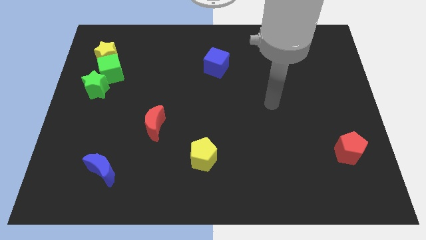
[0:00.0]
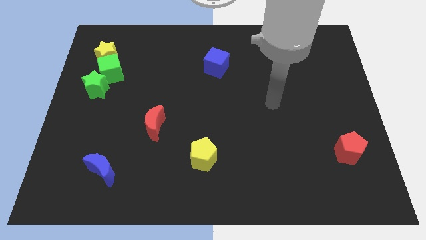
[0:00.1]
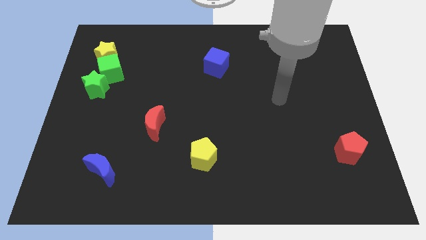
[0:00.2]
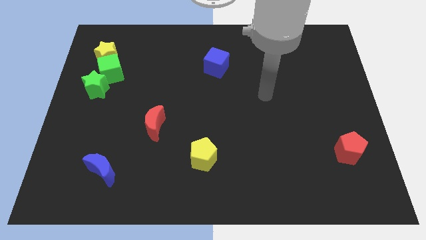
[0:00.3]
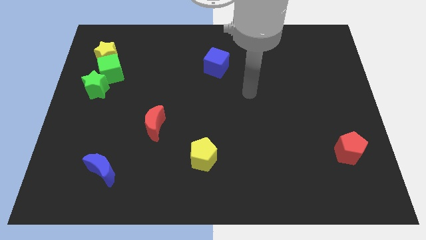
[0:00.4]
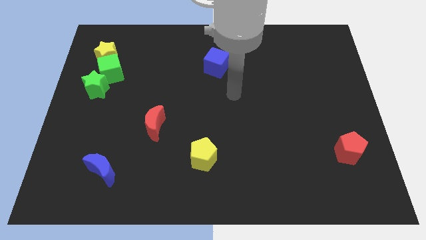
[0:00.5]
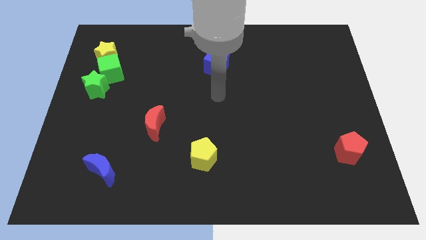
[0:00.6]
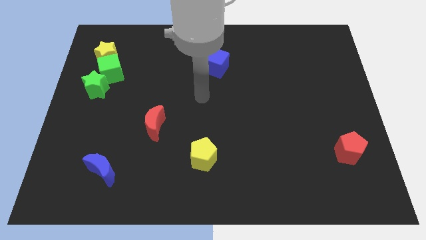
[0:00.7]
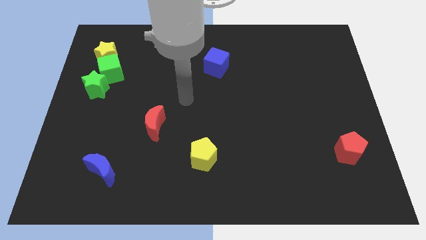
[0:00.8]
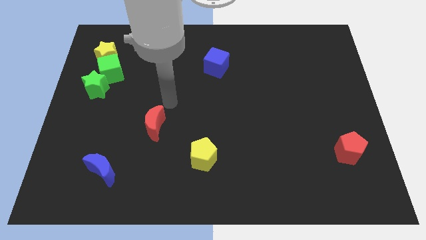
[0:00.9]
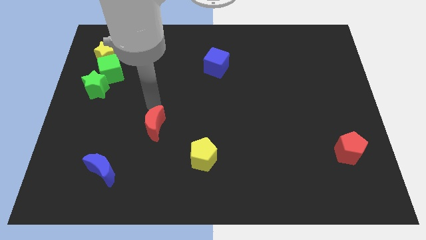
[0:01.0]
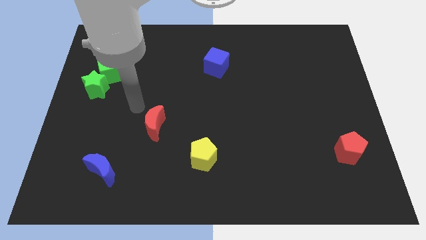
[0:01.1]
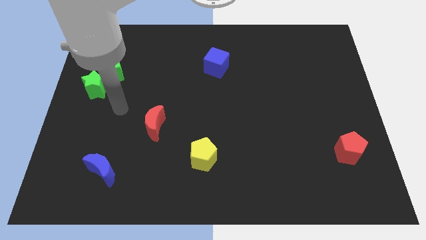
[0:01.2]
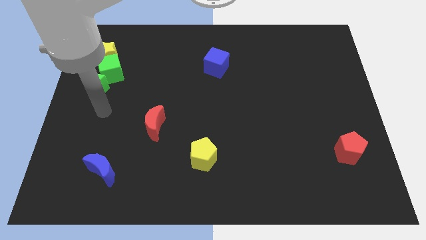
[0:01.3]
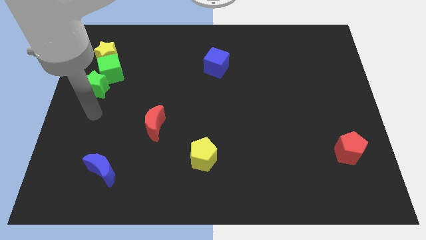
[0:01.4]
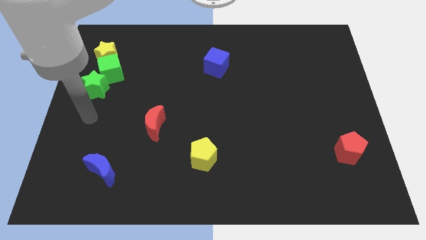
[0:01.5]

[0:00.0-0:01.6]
place your arm to the bottom of green star

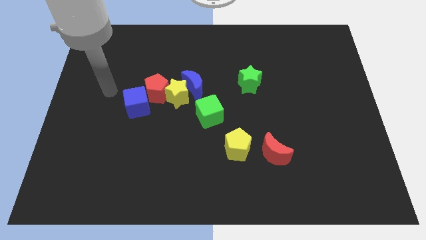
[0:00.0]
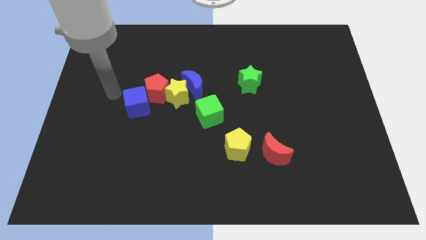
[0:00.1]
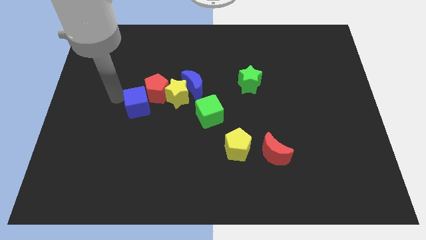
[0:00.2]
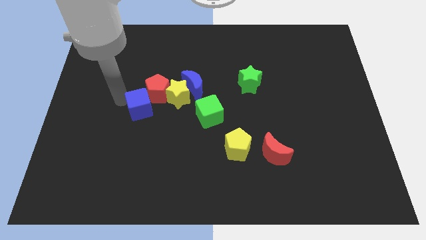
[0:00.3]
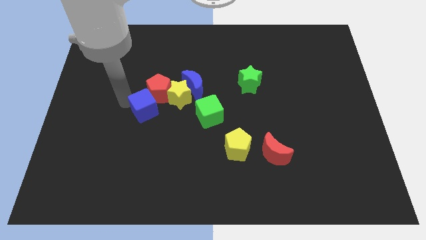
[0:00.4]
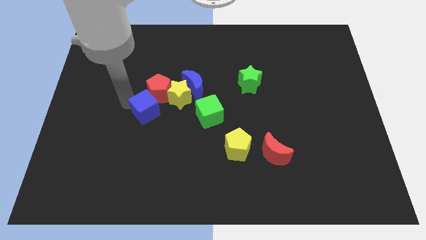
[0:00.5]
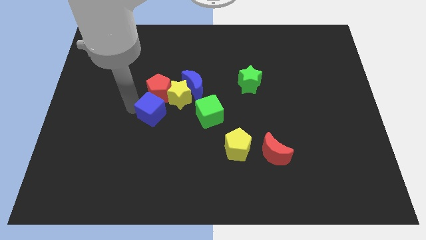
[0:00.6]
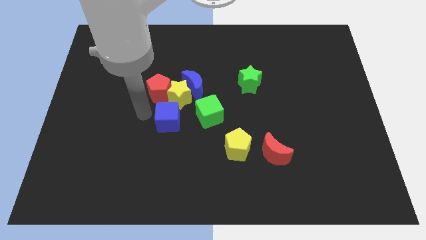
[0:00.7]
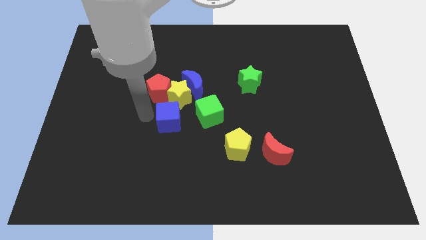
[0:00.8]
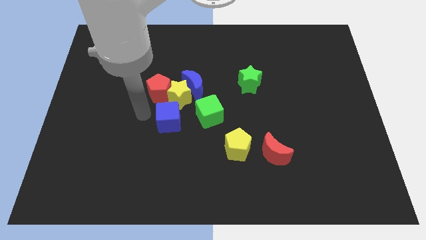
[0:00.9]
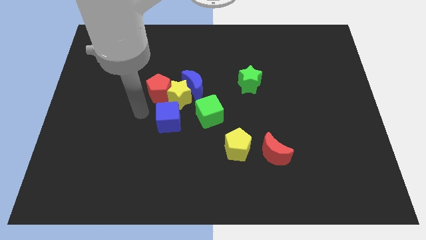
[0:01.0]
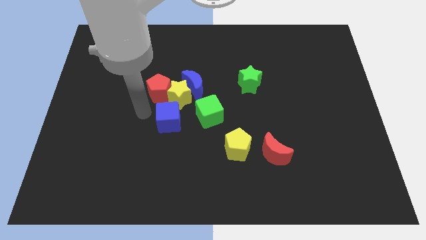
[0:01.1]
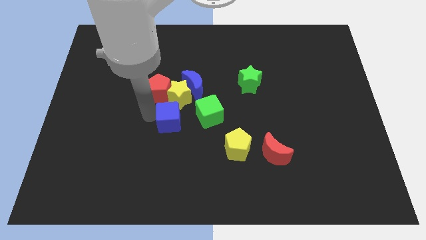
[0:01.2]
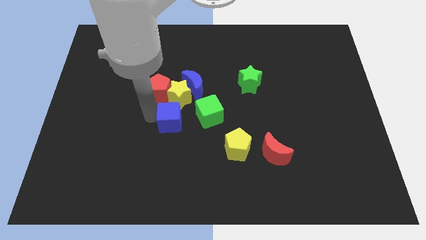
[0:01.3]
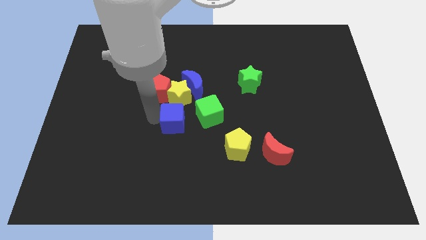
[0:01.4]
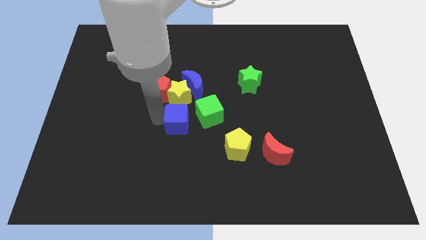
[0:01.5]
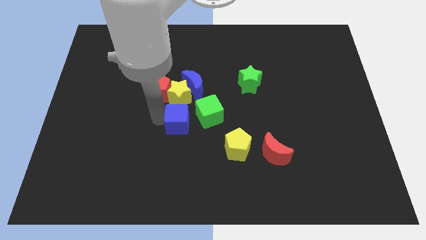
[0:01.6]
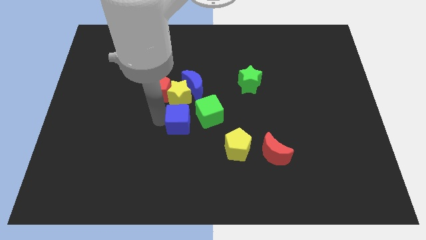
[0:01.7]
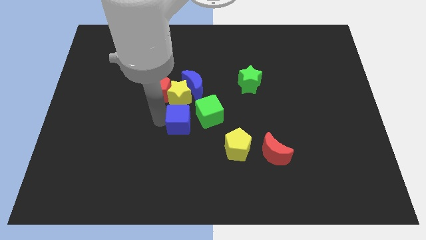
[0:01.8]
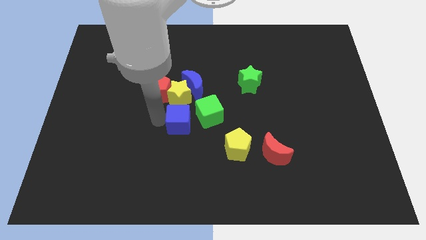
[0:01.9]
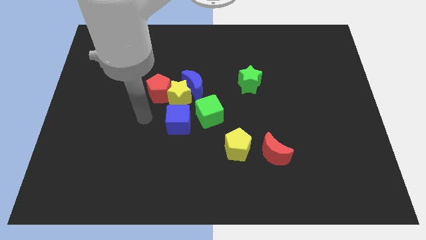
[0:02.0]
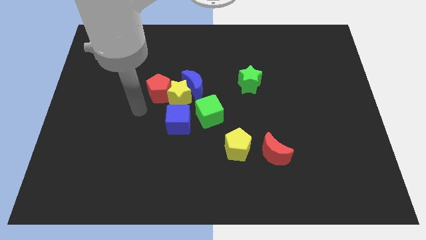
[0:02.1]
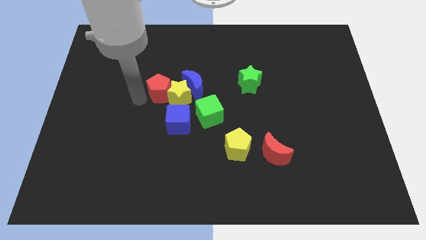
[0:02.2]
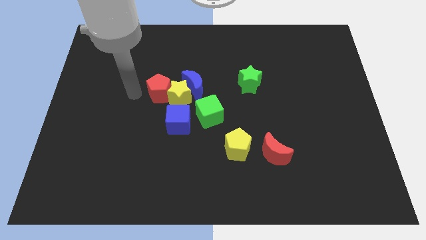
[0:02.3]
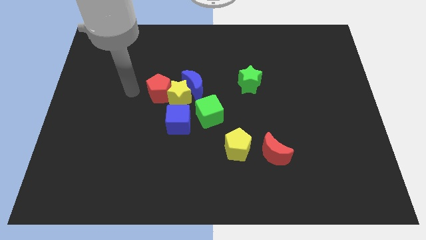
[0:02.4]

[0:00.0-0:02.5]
push the blue cube below the yellow star

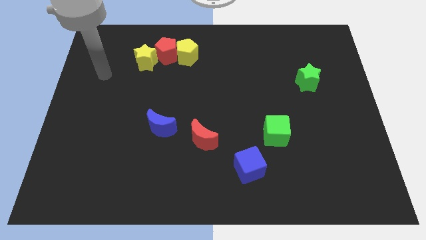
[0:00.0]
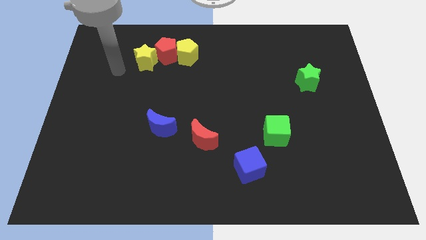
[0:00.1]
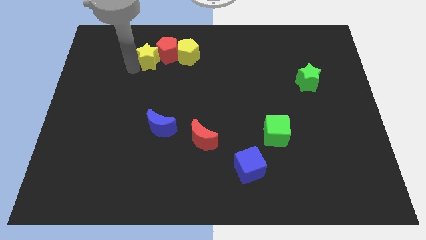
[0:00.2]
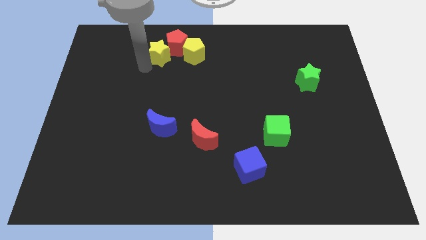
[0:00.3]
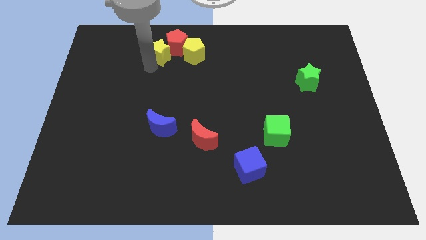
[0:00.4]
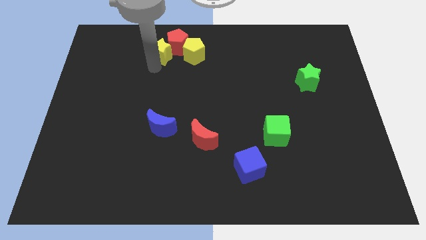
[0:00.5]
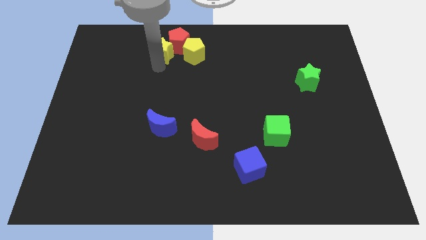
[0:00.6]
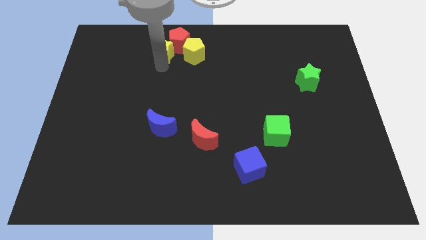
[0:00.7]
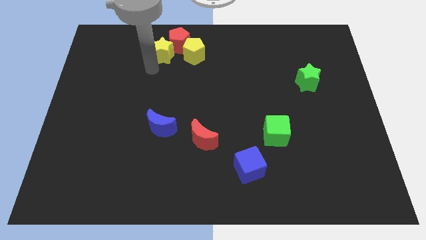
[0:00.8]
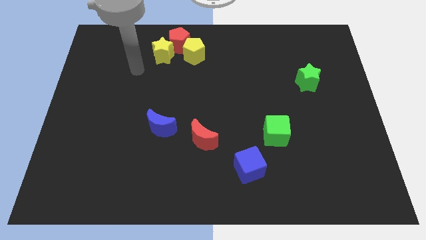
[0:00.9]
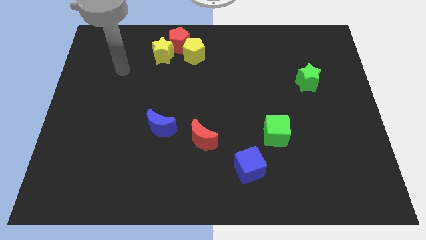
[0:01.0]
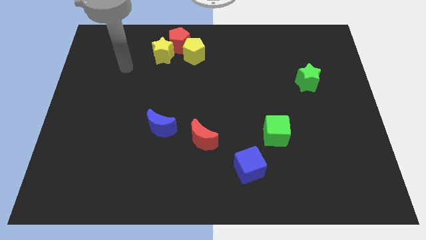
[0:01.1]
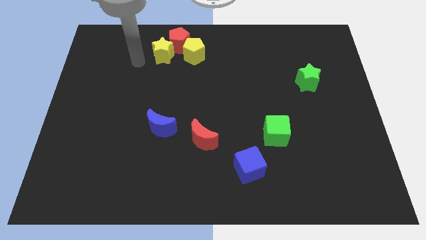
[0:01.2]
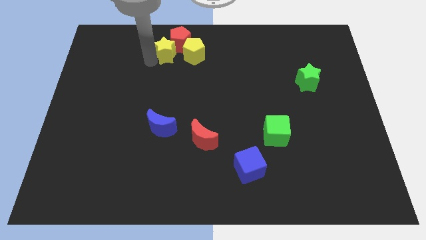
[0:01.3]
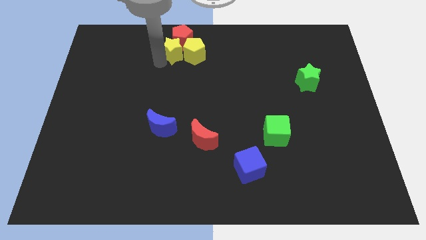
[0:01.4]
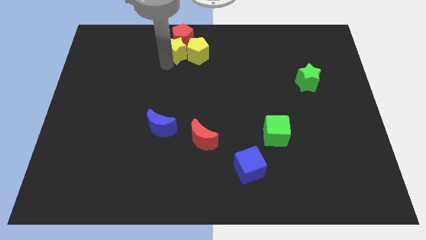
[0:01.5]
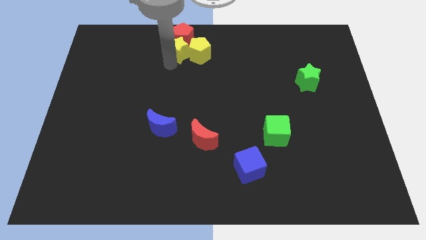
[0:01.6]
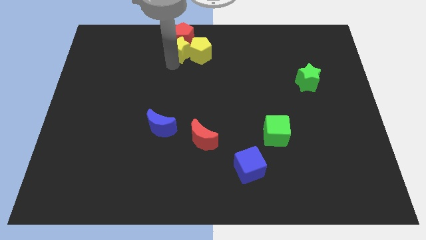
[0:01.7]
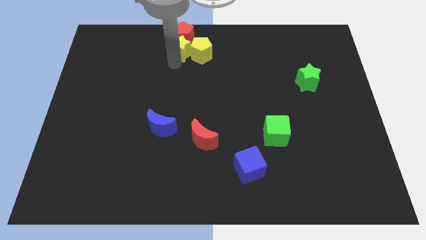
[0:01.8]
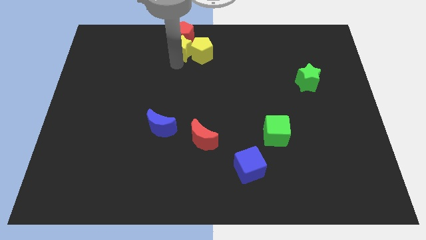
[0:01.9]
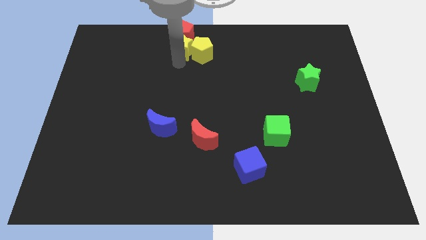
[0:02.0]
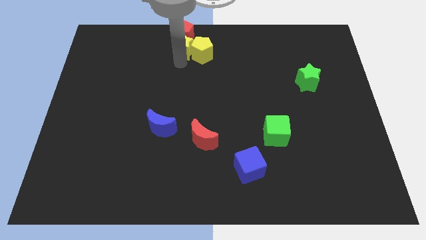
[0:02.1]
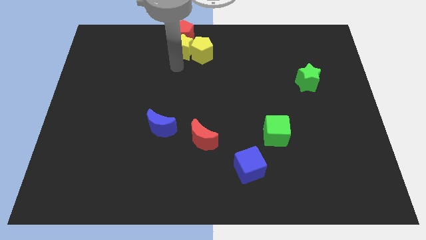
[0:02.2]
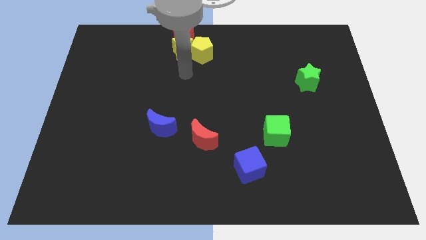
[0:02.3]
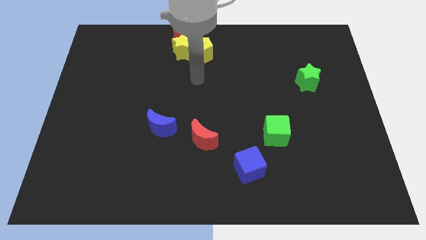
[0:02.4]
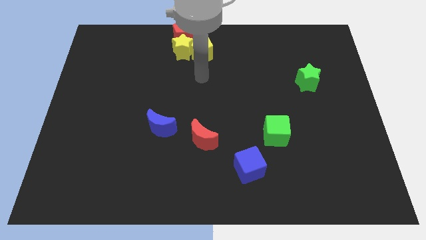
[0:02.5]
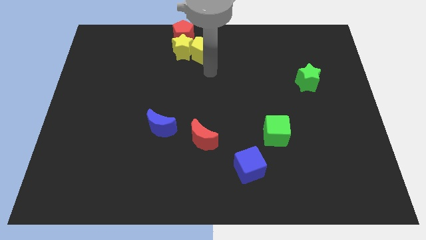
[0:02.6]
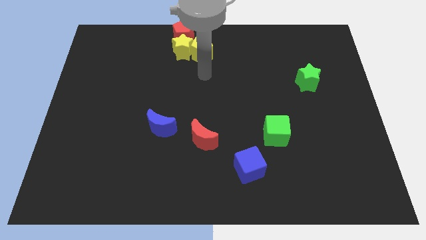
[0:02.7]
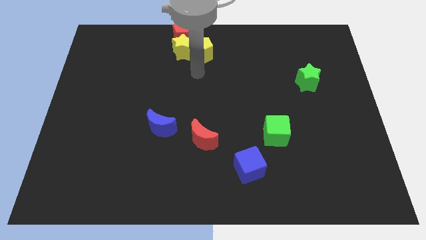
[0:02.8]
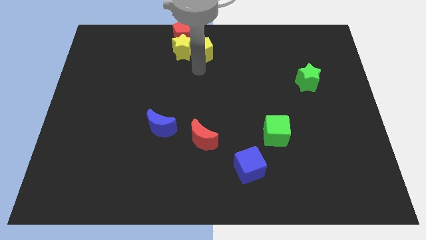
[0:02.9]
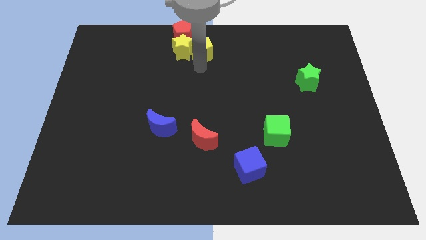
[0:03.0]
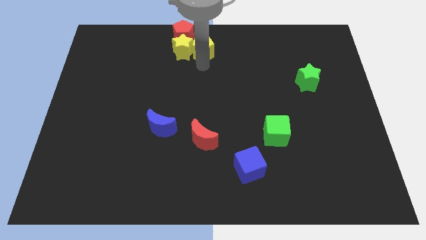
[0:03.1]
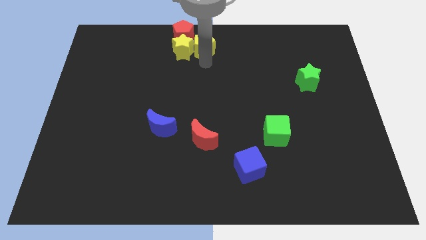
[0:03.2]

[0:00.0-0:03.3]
place the yellow star parallel left to the yellow pentagon

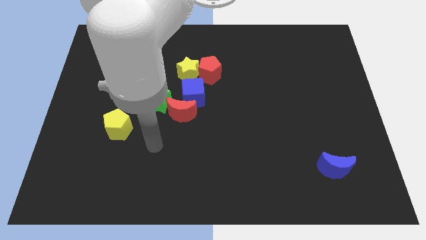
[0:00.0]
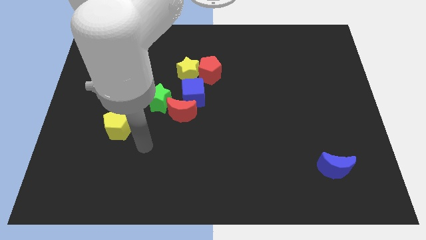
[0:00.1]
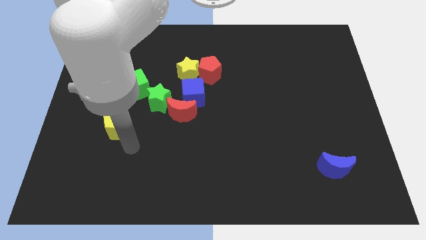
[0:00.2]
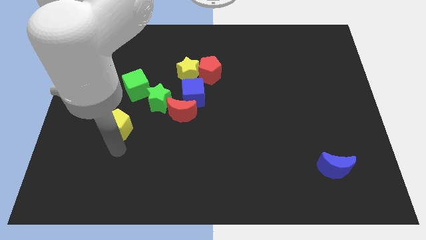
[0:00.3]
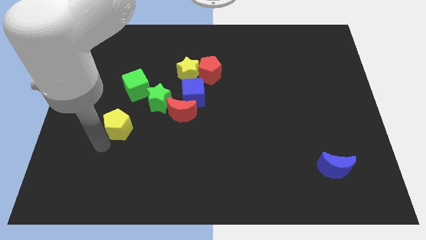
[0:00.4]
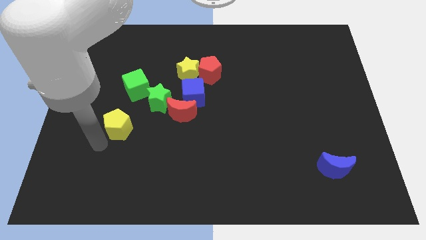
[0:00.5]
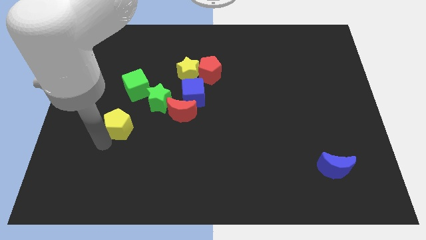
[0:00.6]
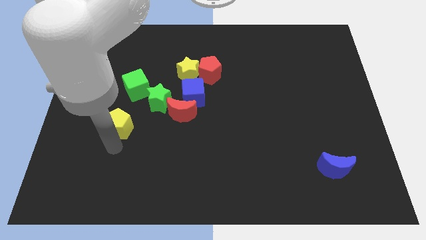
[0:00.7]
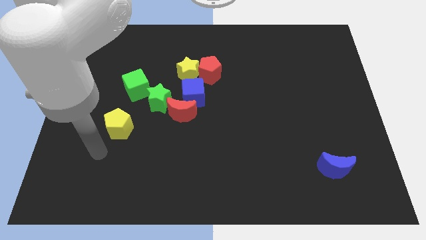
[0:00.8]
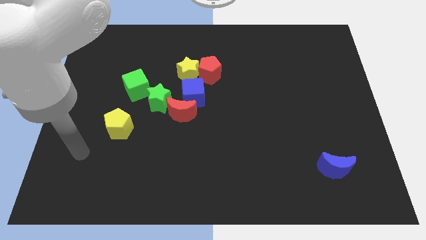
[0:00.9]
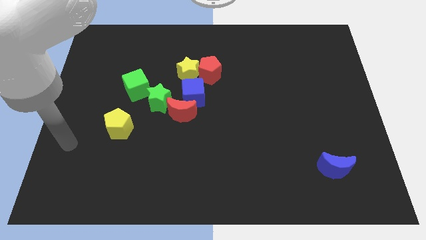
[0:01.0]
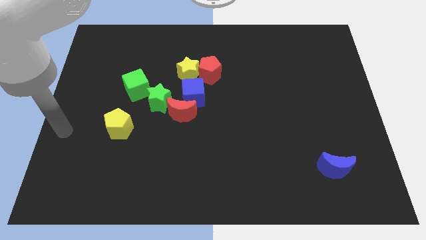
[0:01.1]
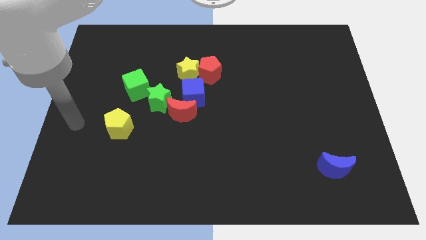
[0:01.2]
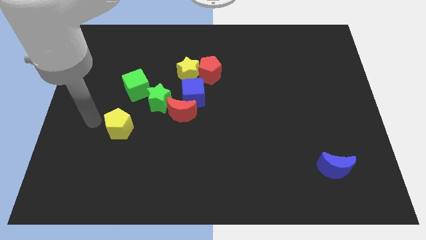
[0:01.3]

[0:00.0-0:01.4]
place your arm at the left side of the yellow pentagon

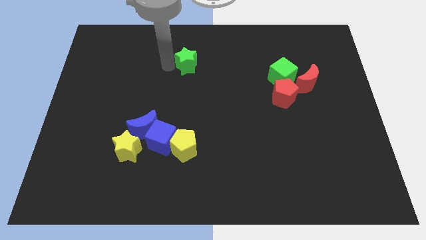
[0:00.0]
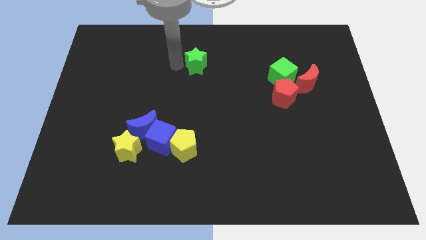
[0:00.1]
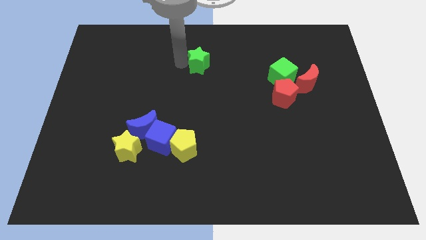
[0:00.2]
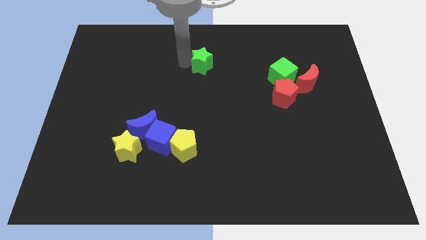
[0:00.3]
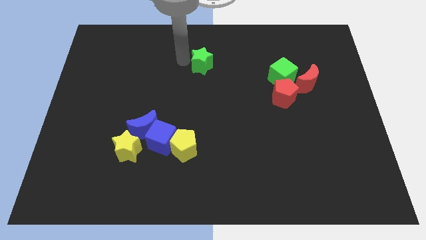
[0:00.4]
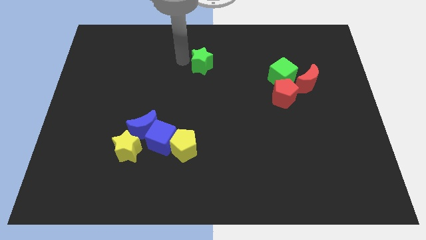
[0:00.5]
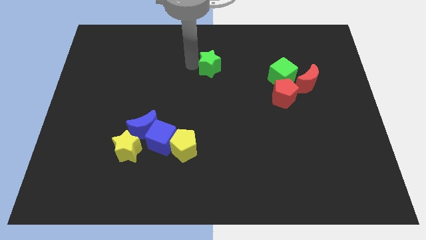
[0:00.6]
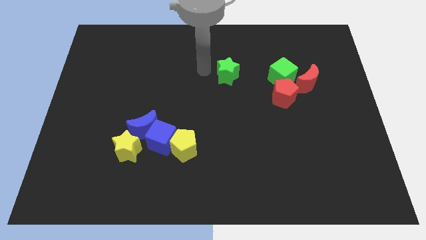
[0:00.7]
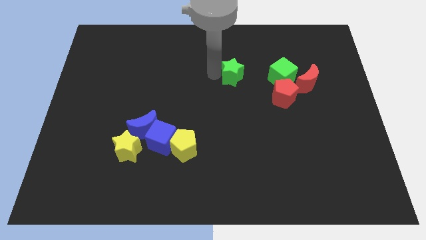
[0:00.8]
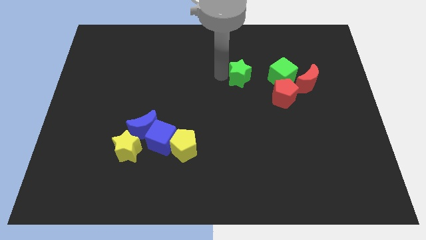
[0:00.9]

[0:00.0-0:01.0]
move green star slightly to the right
